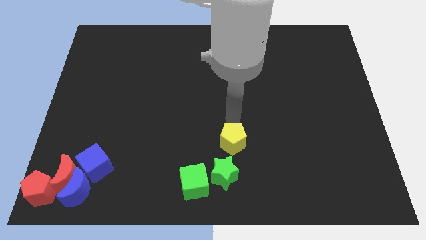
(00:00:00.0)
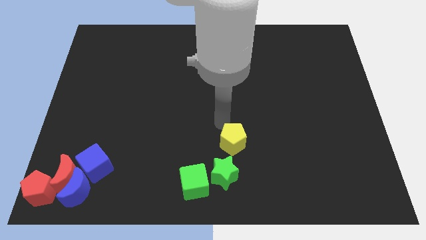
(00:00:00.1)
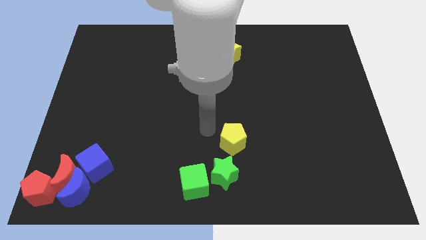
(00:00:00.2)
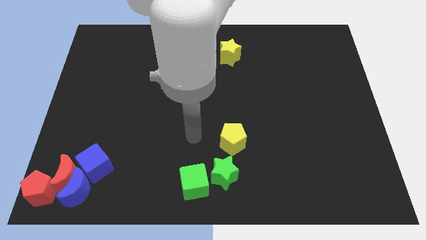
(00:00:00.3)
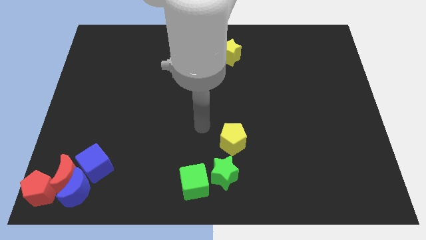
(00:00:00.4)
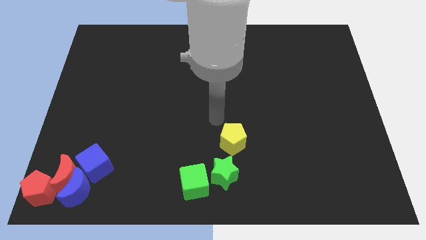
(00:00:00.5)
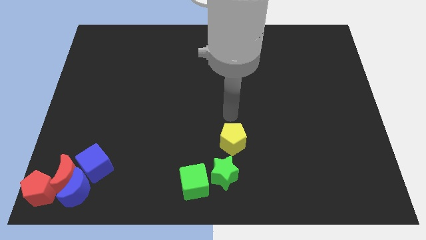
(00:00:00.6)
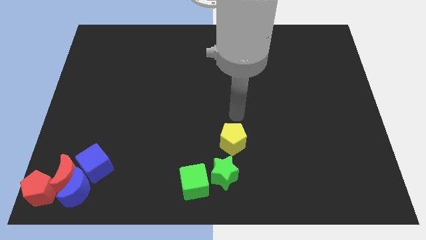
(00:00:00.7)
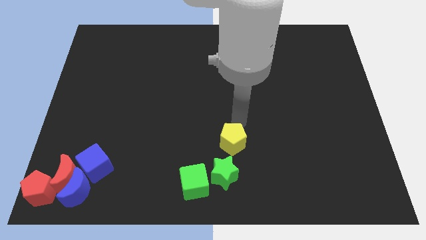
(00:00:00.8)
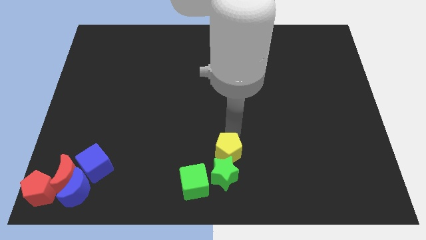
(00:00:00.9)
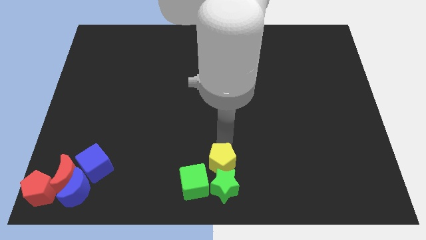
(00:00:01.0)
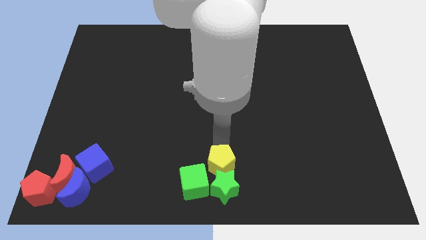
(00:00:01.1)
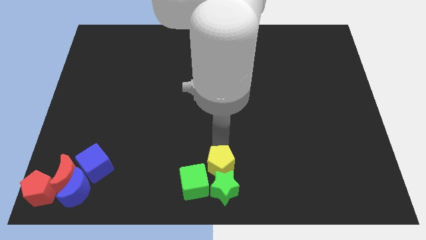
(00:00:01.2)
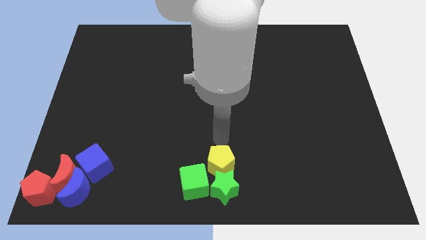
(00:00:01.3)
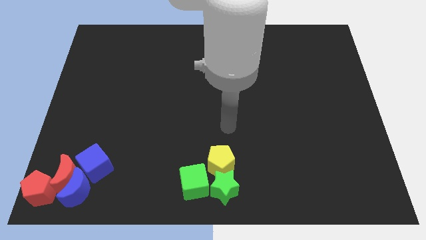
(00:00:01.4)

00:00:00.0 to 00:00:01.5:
push yellow pentagon into green star

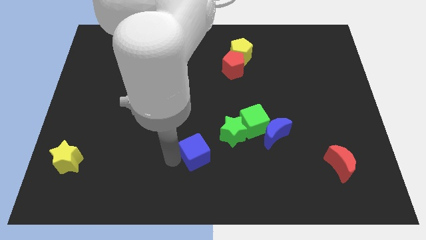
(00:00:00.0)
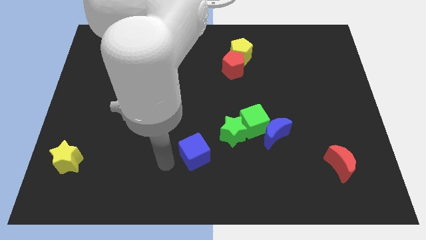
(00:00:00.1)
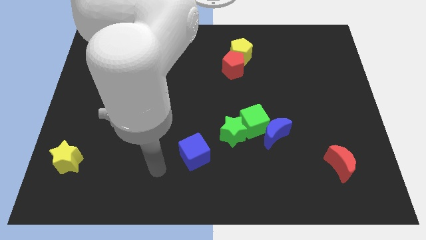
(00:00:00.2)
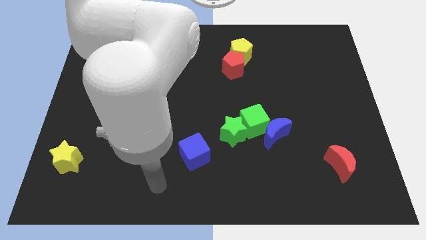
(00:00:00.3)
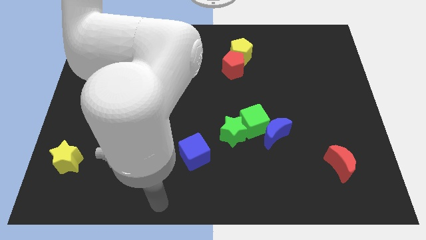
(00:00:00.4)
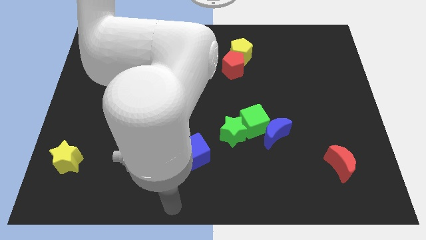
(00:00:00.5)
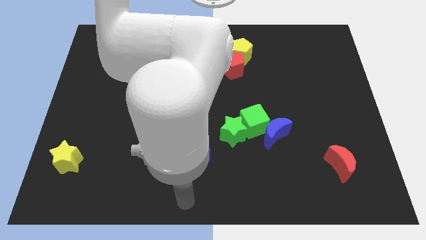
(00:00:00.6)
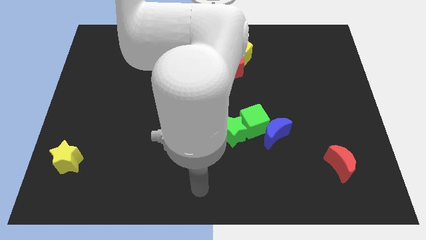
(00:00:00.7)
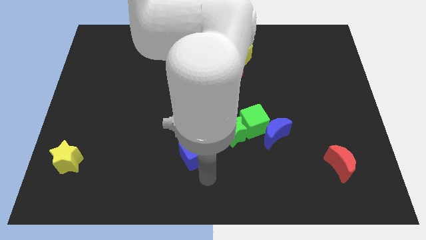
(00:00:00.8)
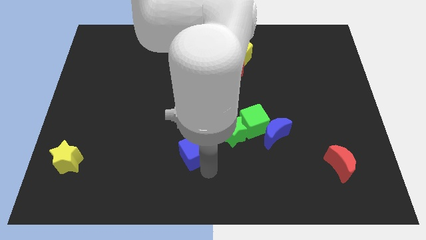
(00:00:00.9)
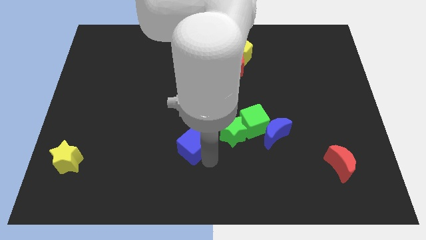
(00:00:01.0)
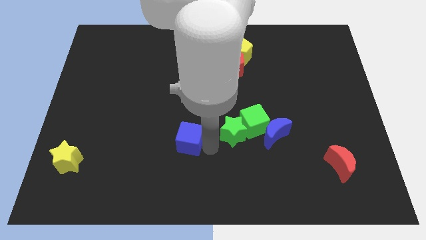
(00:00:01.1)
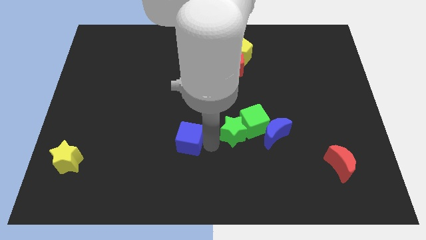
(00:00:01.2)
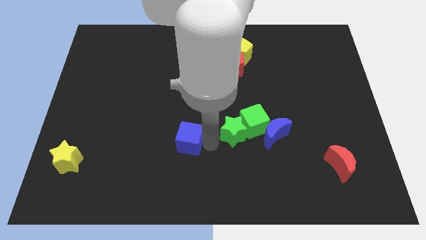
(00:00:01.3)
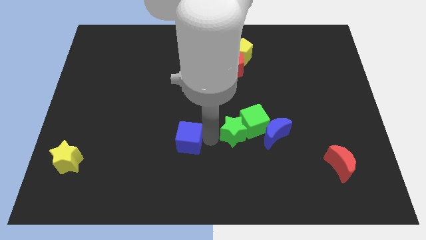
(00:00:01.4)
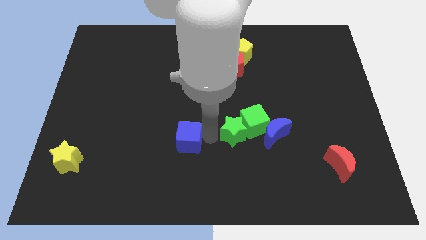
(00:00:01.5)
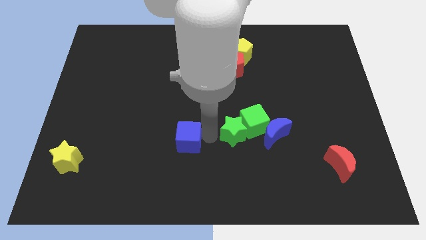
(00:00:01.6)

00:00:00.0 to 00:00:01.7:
place the blue cube to the left of the green star

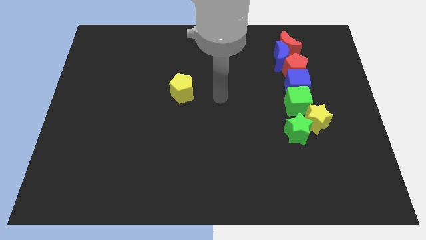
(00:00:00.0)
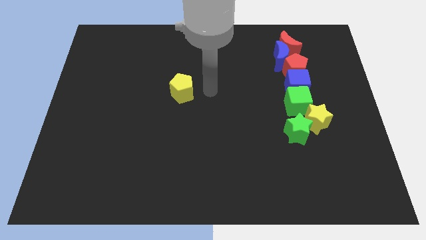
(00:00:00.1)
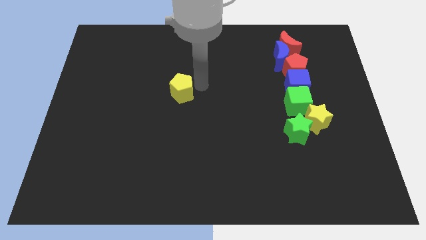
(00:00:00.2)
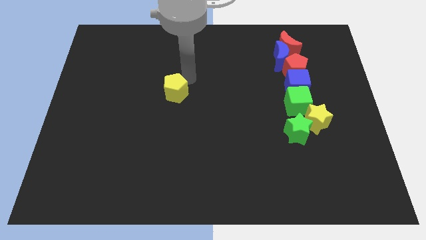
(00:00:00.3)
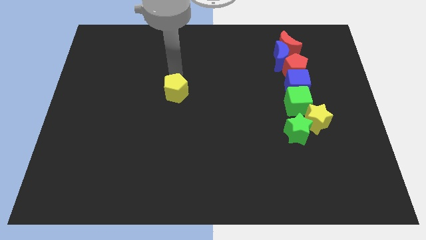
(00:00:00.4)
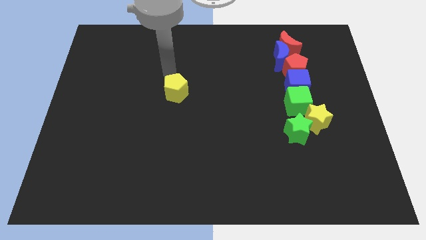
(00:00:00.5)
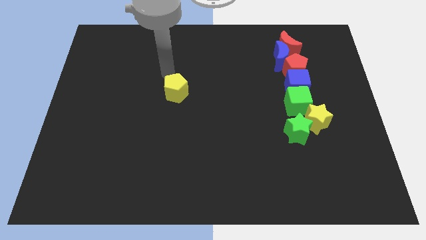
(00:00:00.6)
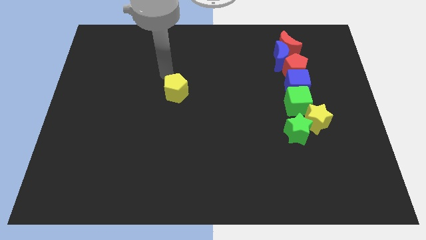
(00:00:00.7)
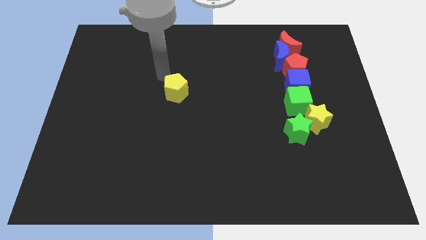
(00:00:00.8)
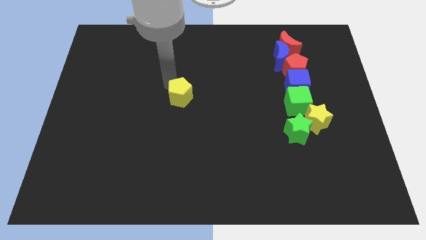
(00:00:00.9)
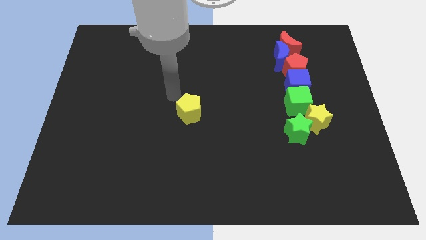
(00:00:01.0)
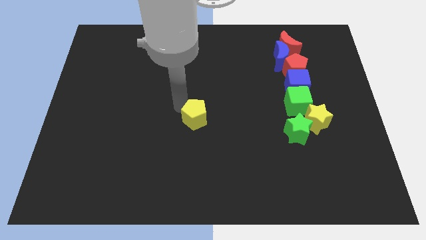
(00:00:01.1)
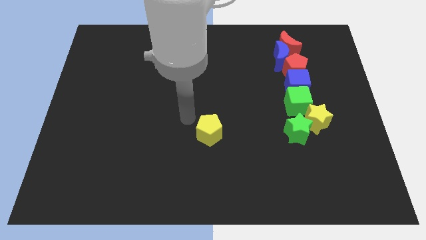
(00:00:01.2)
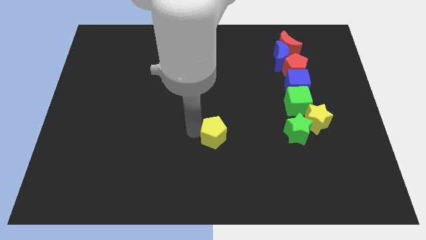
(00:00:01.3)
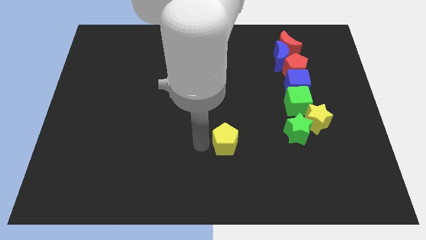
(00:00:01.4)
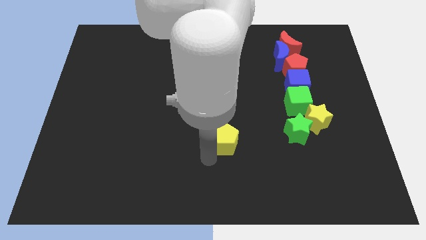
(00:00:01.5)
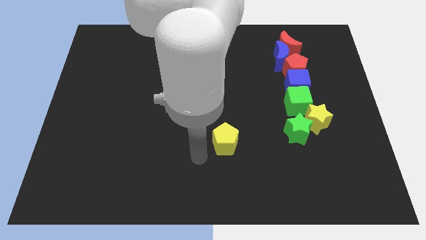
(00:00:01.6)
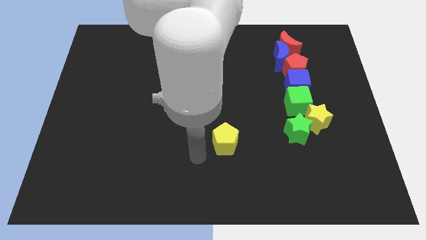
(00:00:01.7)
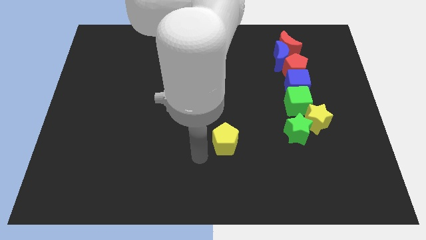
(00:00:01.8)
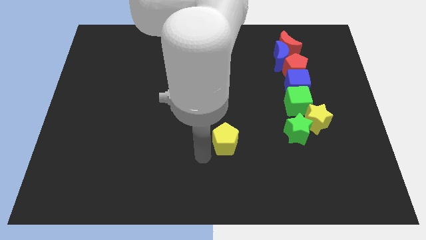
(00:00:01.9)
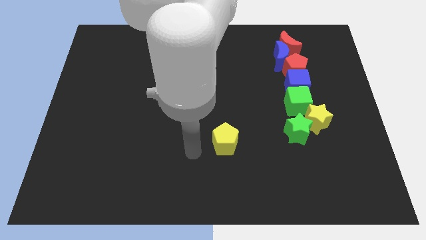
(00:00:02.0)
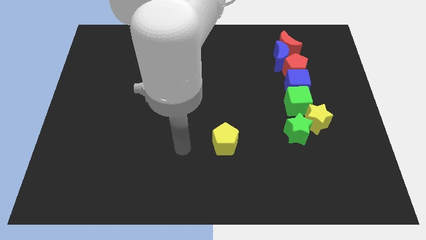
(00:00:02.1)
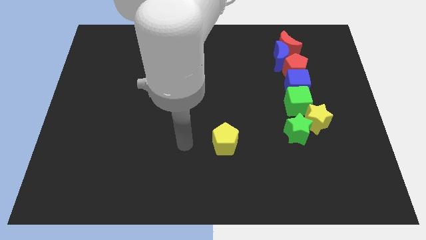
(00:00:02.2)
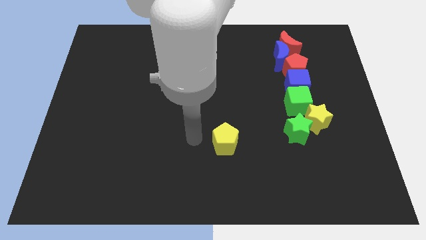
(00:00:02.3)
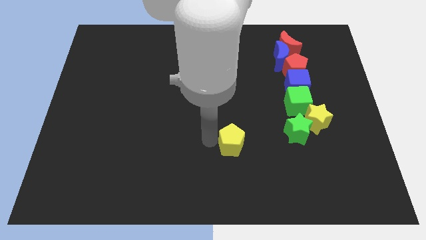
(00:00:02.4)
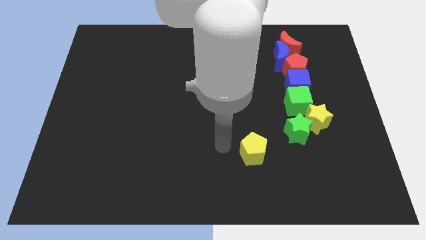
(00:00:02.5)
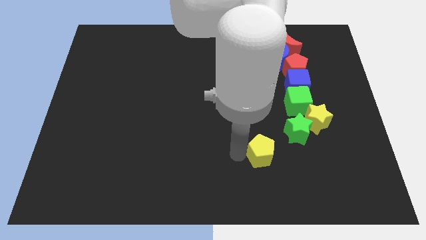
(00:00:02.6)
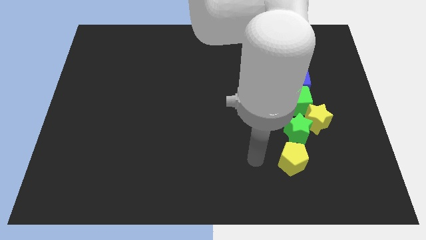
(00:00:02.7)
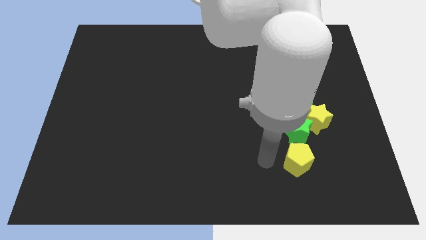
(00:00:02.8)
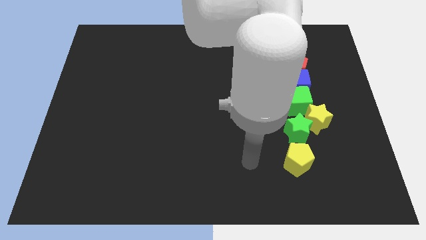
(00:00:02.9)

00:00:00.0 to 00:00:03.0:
move the yellow pentagon diagonally to the down

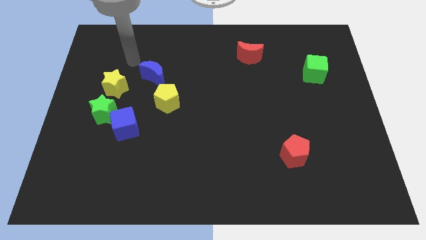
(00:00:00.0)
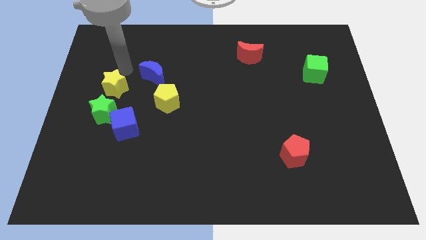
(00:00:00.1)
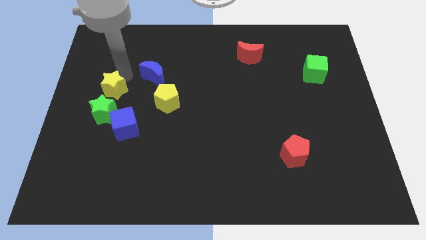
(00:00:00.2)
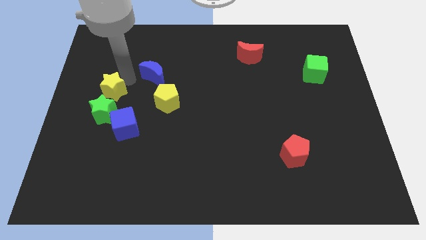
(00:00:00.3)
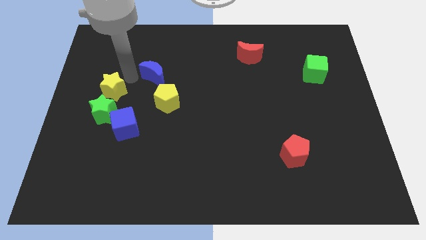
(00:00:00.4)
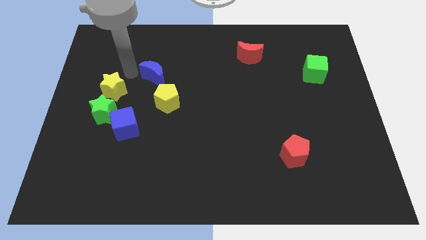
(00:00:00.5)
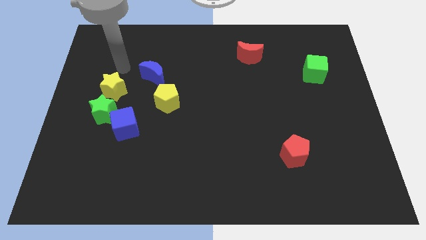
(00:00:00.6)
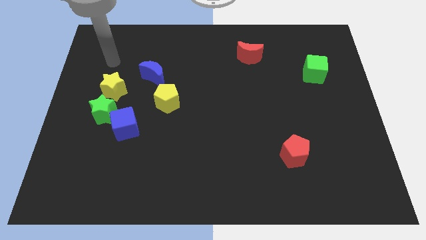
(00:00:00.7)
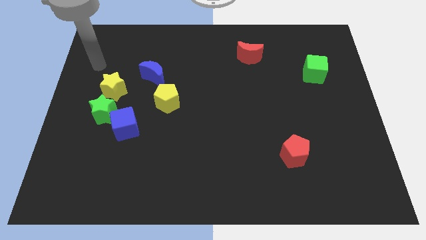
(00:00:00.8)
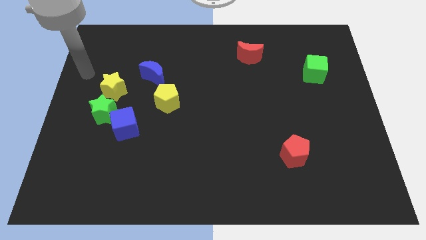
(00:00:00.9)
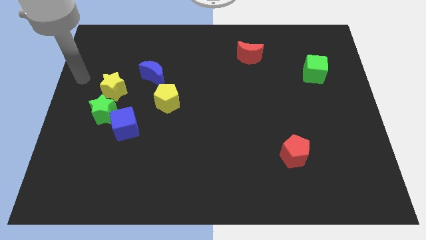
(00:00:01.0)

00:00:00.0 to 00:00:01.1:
place your hand to the left of the yellow star

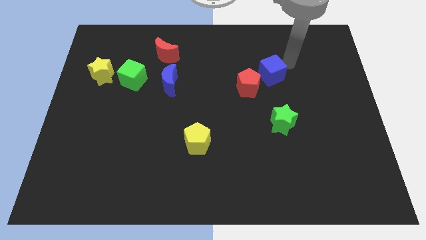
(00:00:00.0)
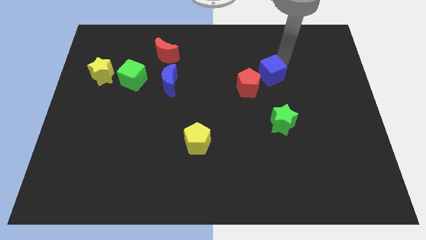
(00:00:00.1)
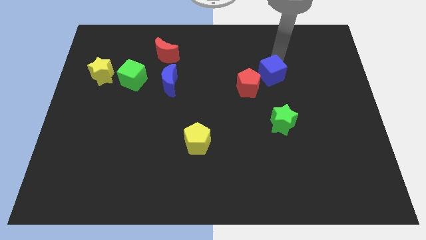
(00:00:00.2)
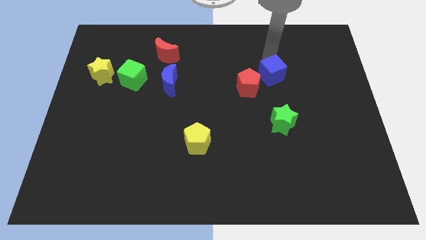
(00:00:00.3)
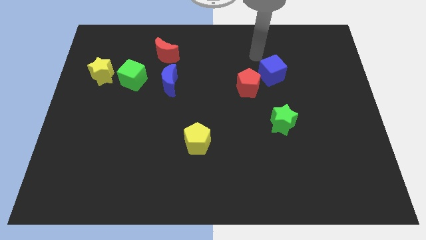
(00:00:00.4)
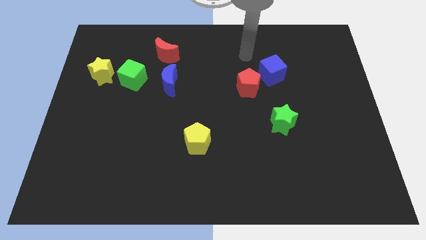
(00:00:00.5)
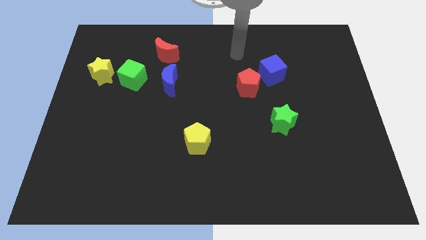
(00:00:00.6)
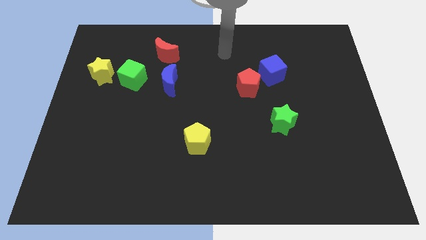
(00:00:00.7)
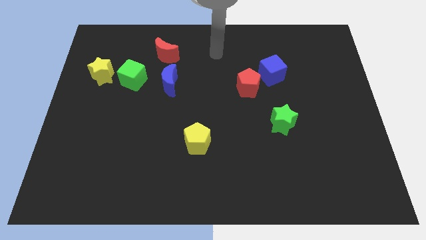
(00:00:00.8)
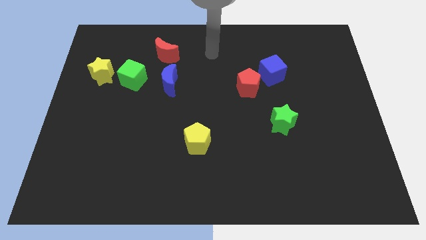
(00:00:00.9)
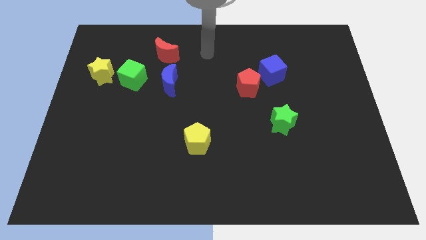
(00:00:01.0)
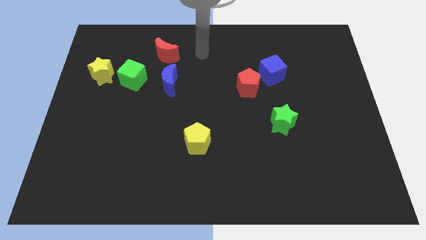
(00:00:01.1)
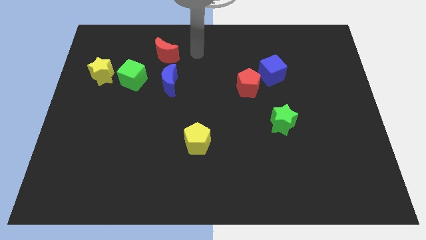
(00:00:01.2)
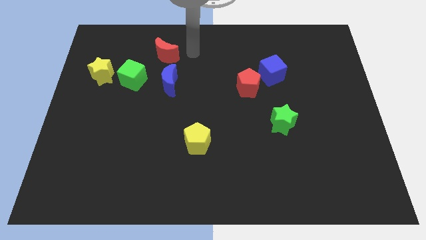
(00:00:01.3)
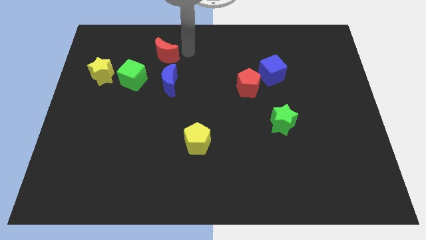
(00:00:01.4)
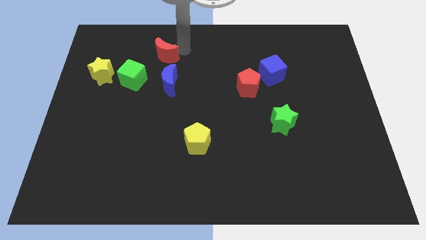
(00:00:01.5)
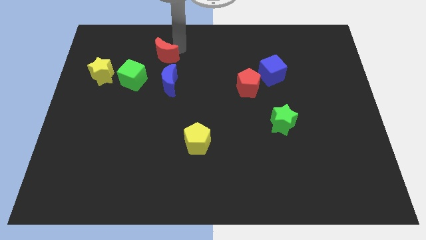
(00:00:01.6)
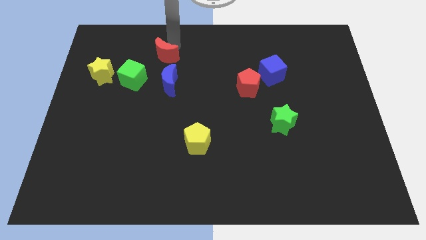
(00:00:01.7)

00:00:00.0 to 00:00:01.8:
move the arm to the top of the red crescent
